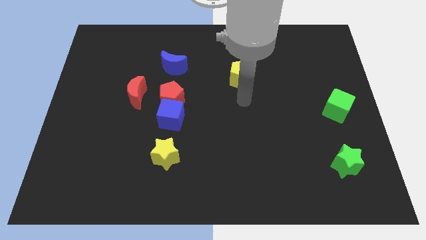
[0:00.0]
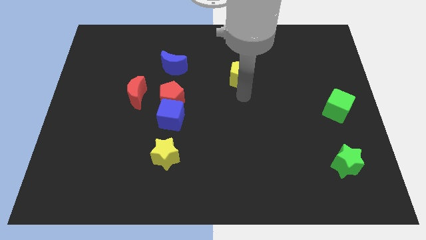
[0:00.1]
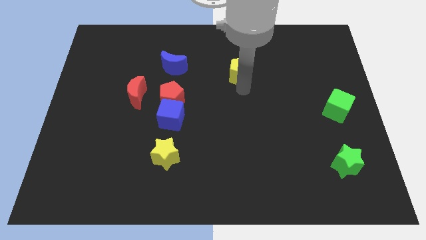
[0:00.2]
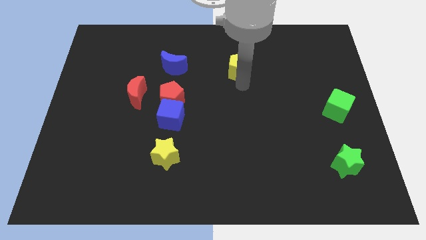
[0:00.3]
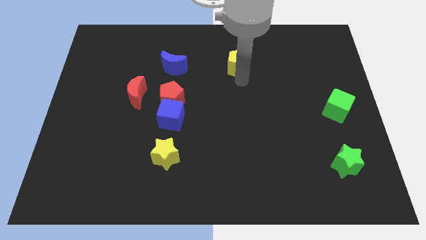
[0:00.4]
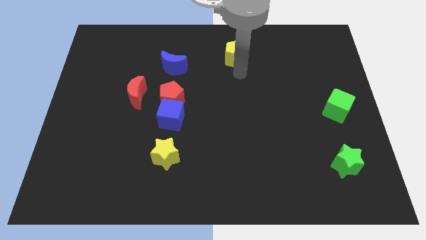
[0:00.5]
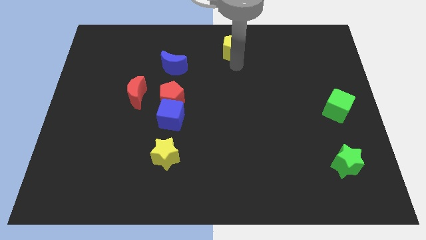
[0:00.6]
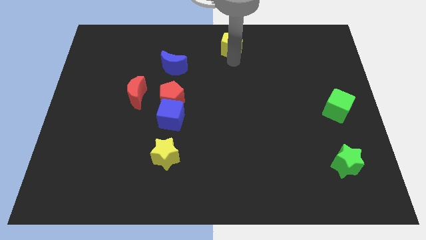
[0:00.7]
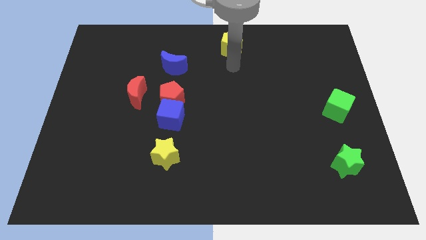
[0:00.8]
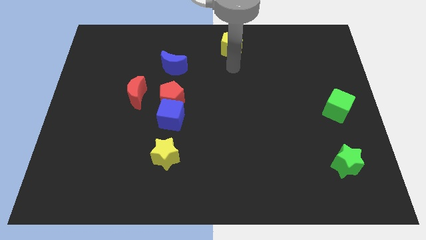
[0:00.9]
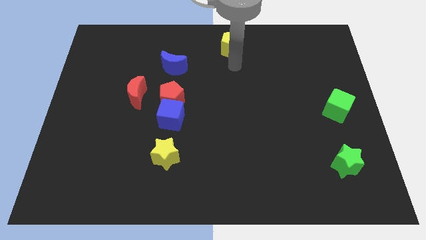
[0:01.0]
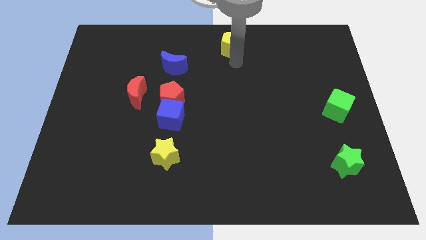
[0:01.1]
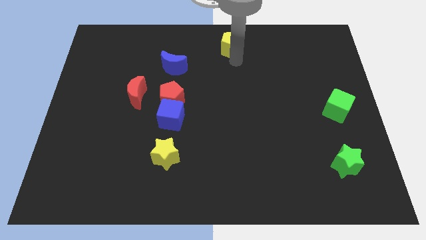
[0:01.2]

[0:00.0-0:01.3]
move the yellow pentagon to the top centre of the board

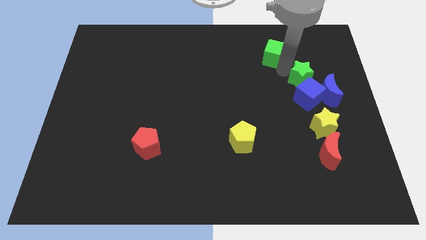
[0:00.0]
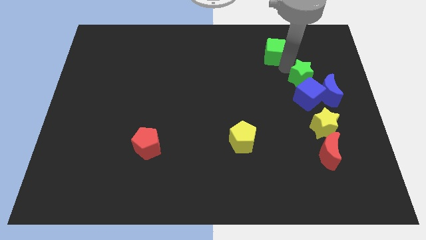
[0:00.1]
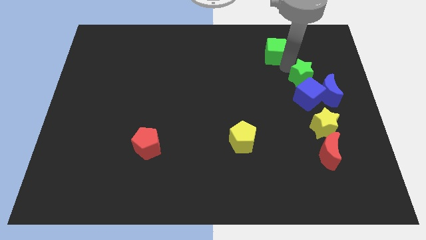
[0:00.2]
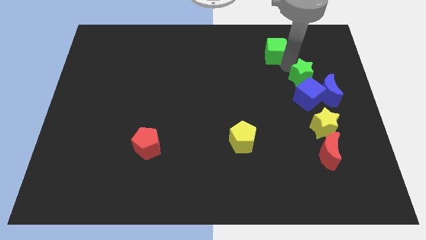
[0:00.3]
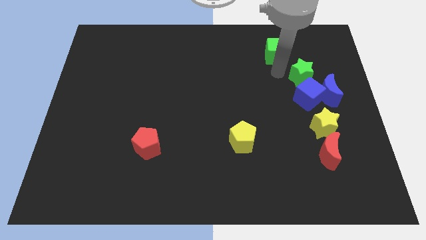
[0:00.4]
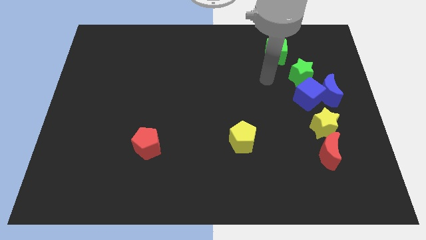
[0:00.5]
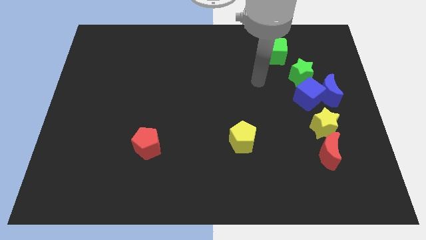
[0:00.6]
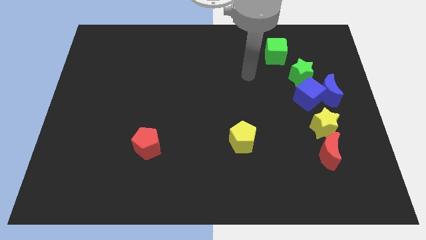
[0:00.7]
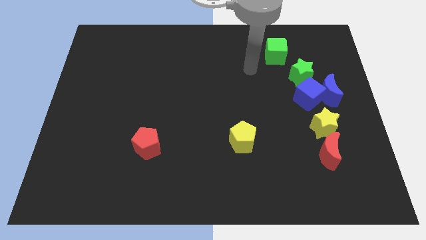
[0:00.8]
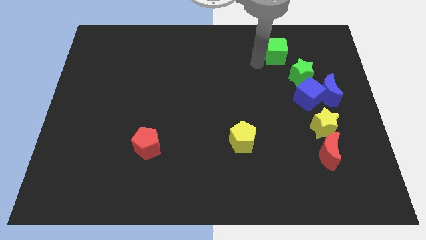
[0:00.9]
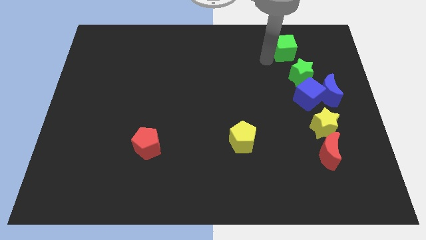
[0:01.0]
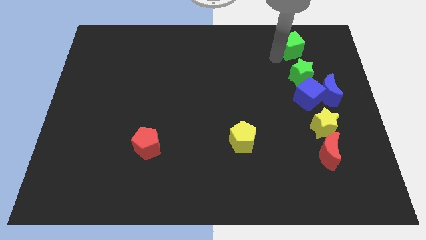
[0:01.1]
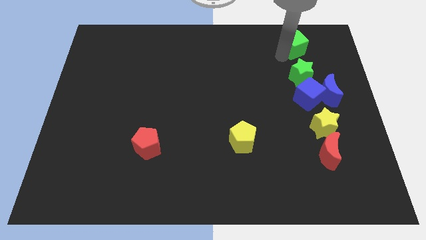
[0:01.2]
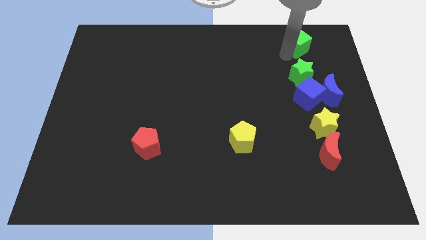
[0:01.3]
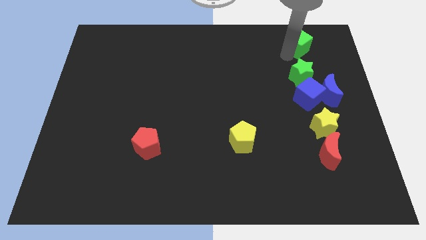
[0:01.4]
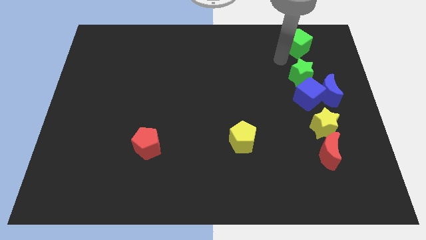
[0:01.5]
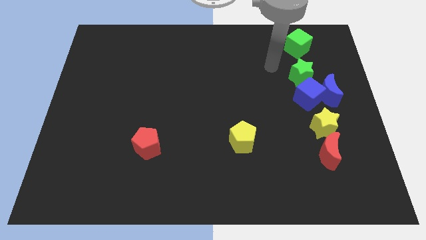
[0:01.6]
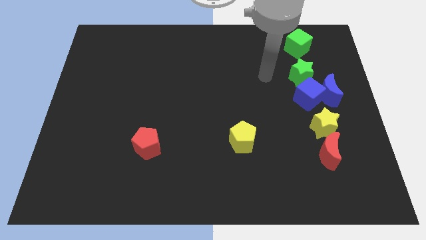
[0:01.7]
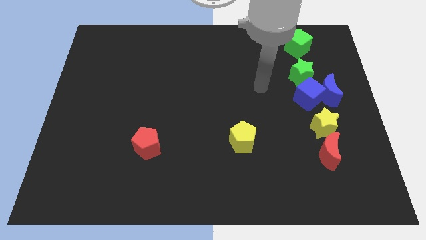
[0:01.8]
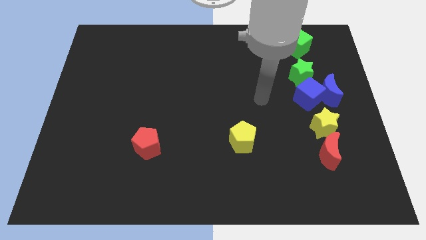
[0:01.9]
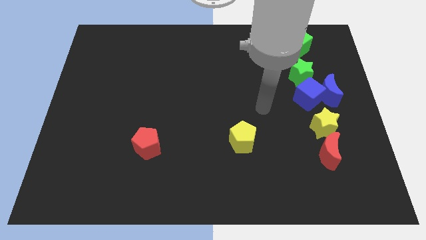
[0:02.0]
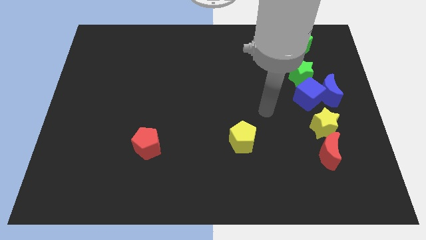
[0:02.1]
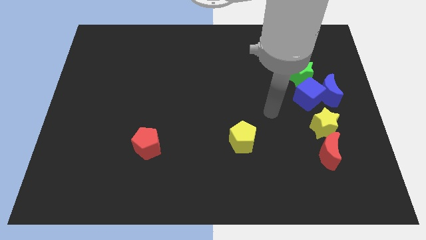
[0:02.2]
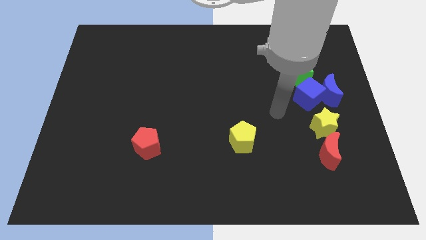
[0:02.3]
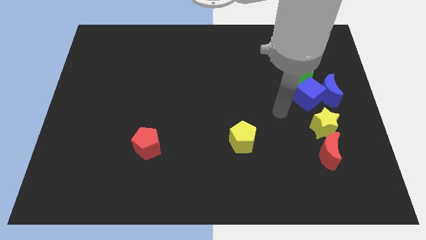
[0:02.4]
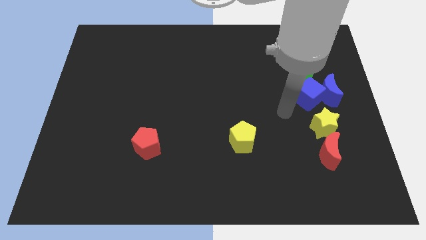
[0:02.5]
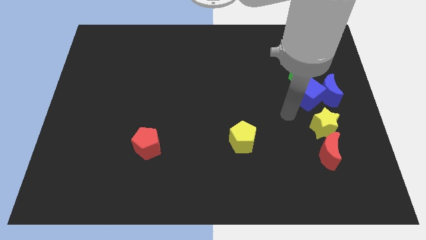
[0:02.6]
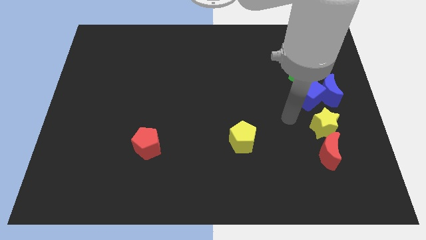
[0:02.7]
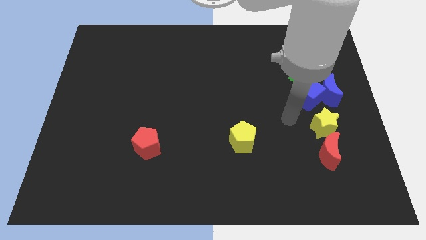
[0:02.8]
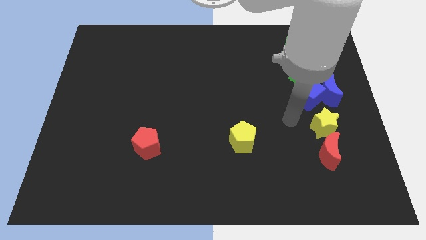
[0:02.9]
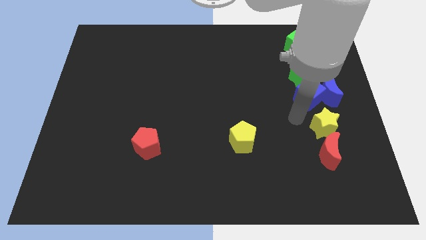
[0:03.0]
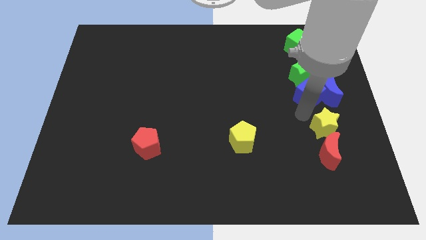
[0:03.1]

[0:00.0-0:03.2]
place the green cube to the top side of the green star

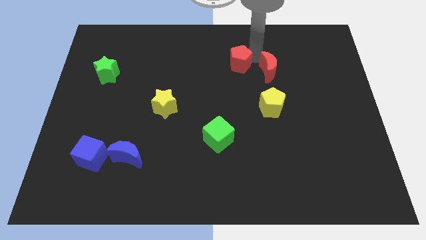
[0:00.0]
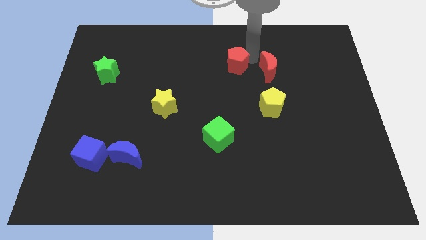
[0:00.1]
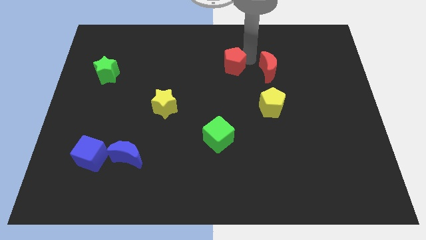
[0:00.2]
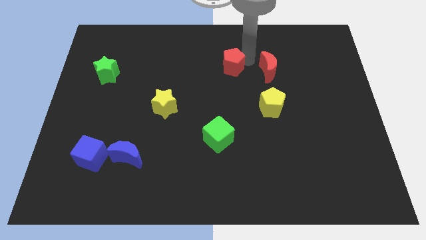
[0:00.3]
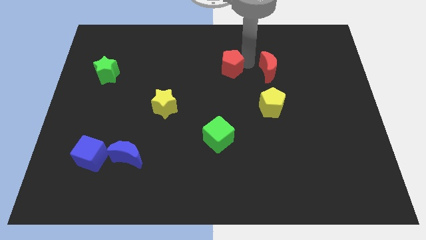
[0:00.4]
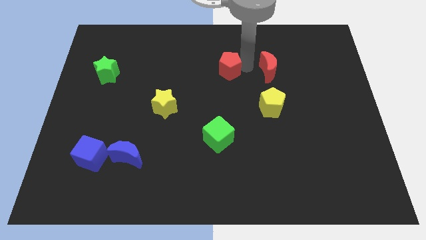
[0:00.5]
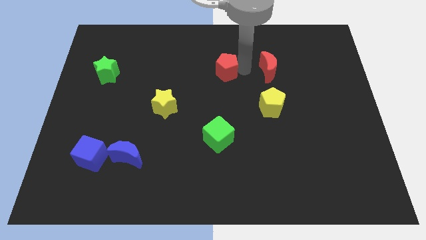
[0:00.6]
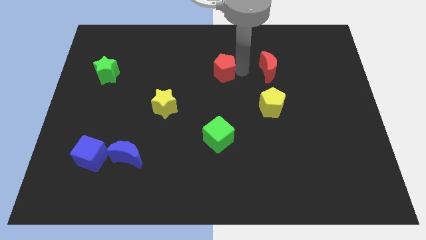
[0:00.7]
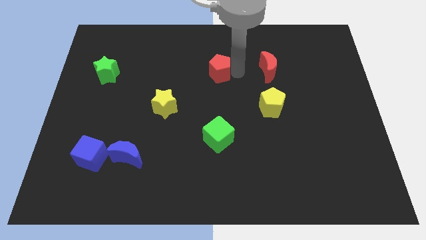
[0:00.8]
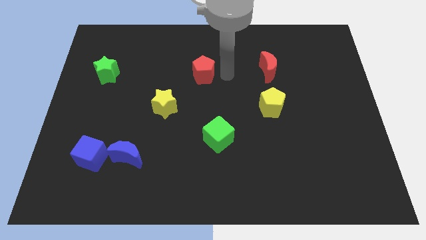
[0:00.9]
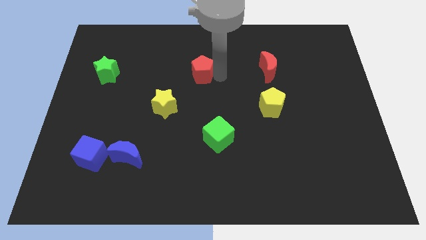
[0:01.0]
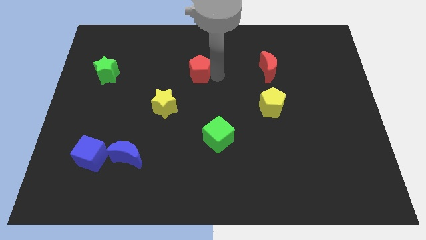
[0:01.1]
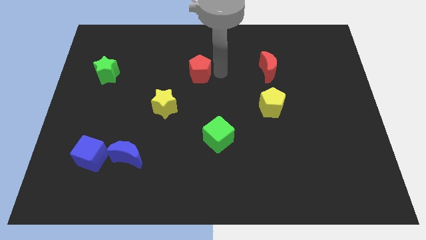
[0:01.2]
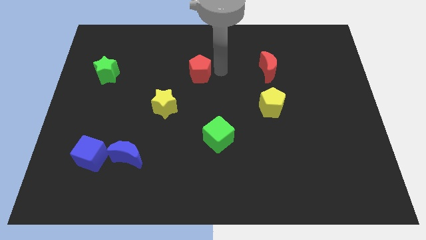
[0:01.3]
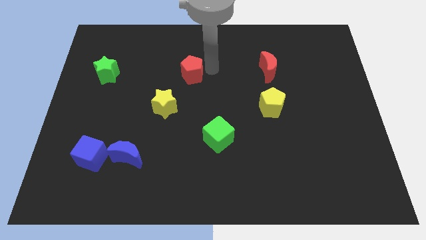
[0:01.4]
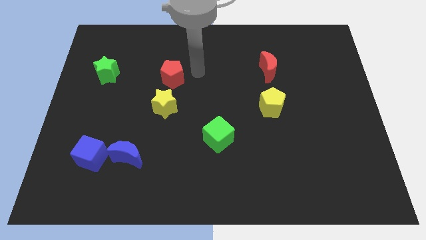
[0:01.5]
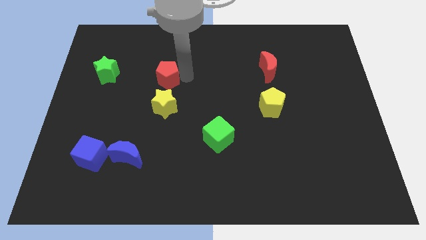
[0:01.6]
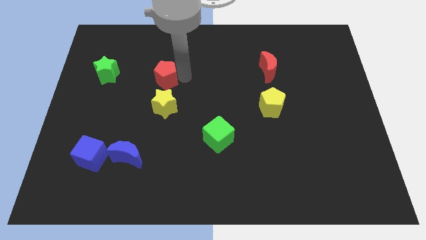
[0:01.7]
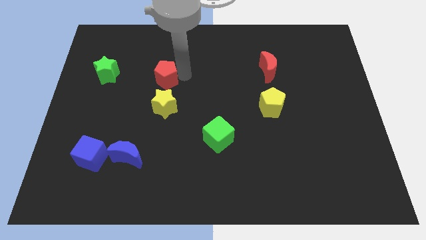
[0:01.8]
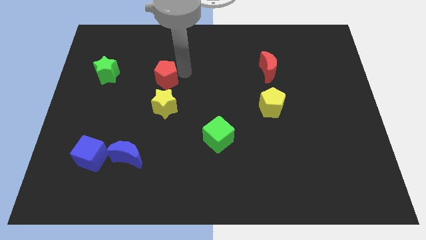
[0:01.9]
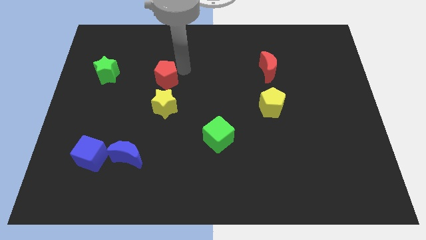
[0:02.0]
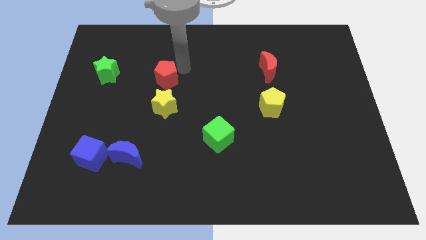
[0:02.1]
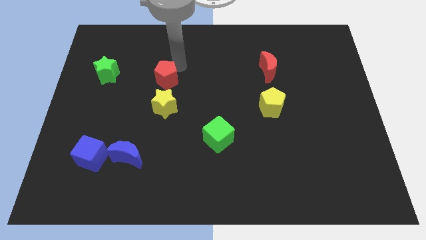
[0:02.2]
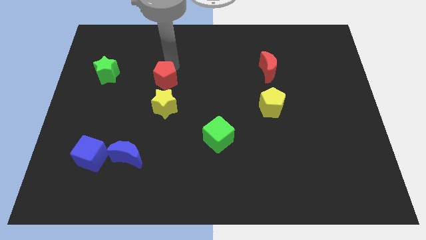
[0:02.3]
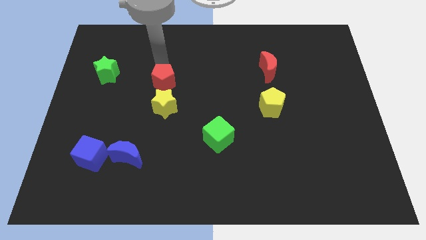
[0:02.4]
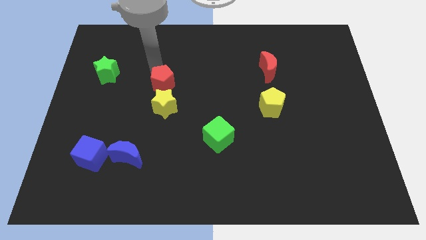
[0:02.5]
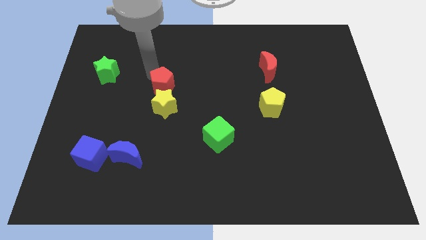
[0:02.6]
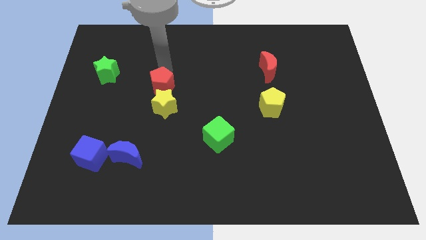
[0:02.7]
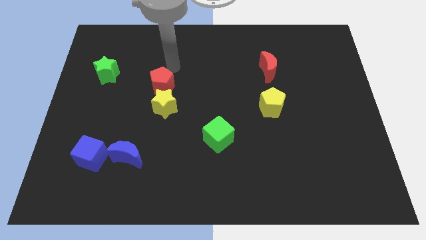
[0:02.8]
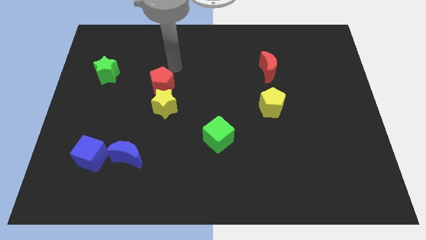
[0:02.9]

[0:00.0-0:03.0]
move the red pentagon to the top of the yellow star

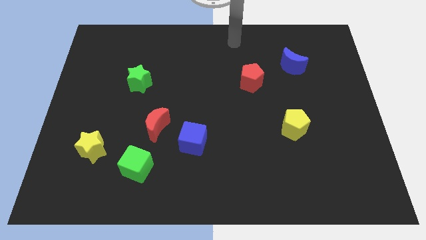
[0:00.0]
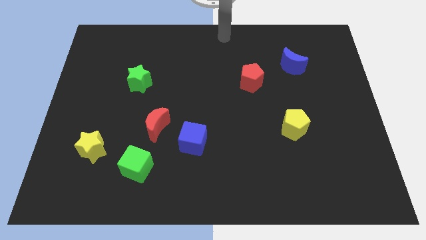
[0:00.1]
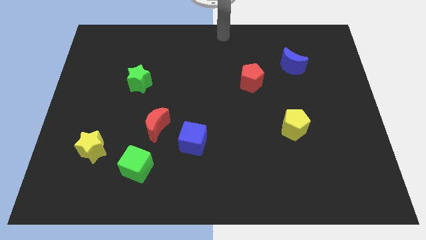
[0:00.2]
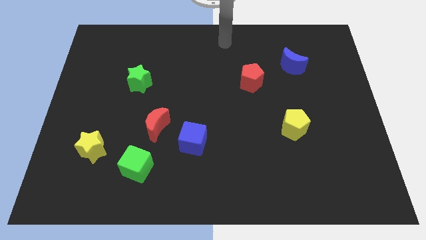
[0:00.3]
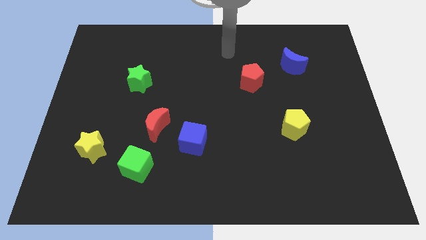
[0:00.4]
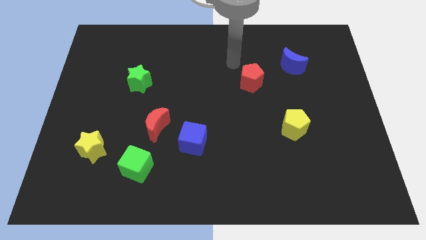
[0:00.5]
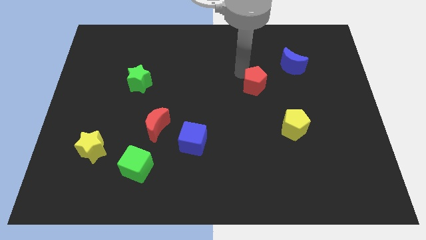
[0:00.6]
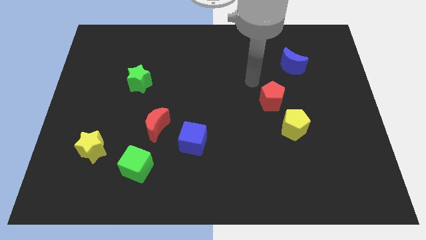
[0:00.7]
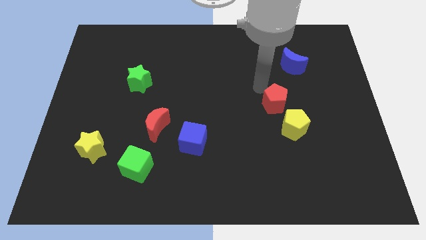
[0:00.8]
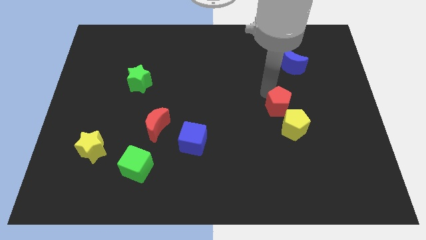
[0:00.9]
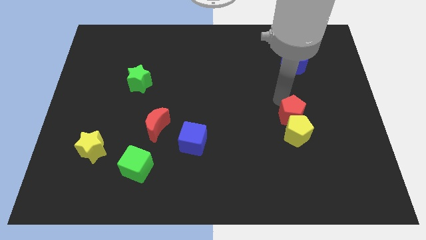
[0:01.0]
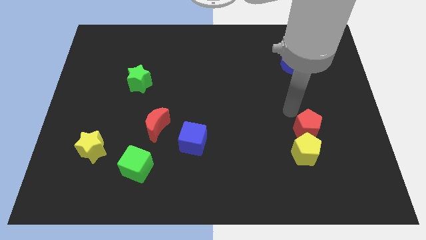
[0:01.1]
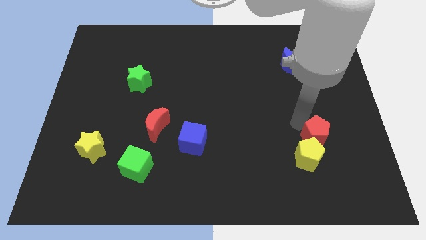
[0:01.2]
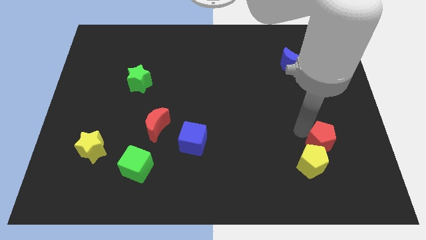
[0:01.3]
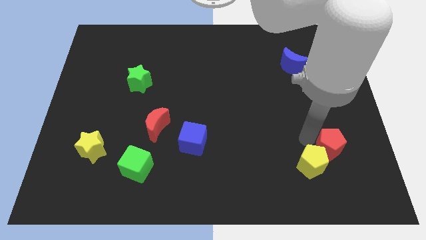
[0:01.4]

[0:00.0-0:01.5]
push red pentagon into yellow pentagon
